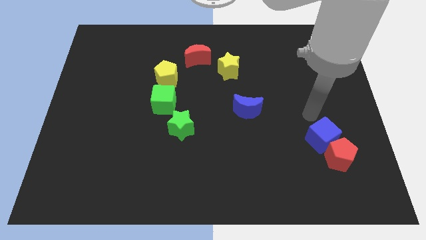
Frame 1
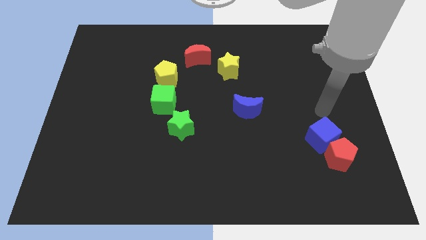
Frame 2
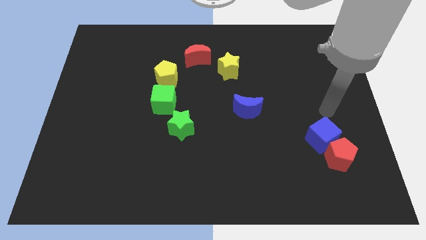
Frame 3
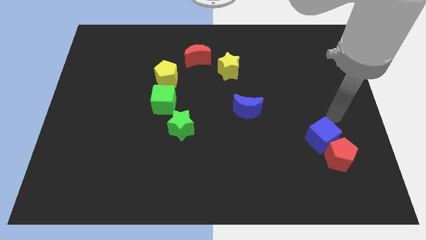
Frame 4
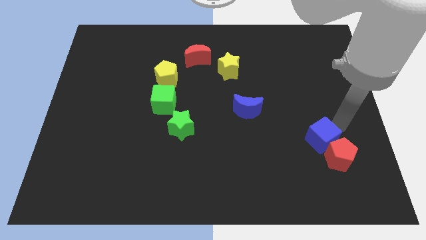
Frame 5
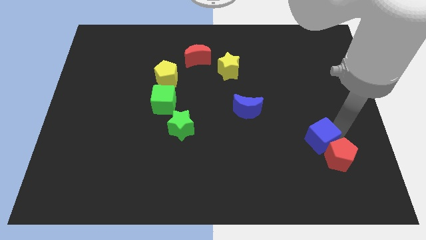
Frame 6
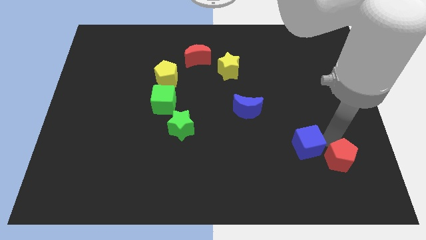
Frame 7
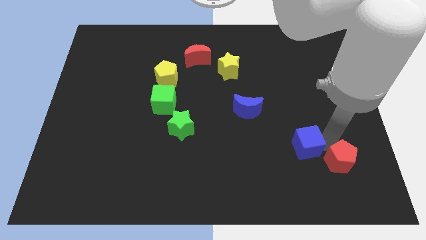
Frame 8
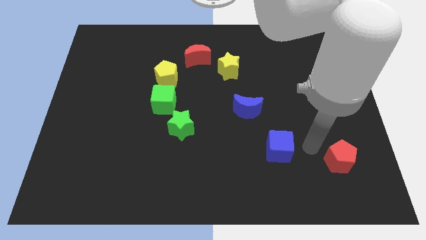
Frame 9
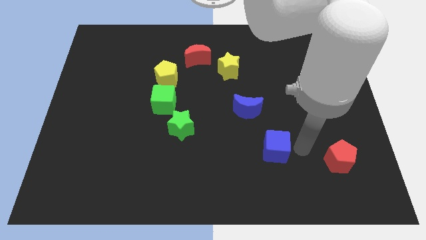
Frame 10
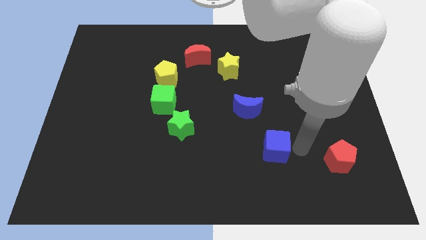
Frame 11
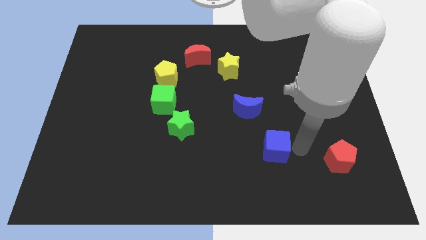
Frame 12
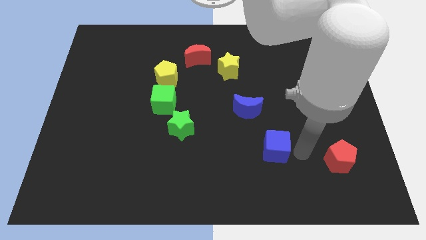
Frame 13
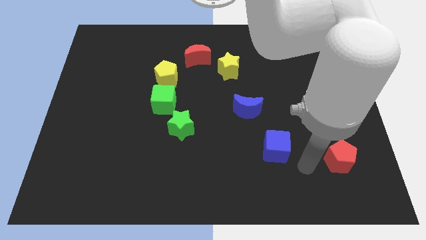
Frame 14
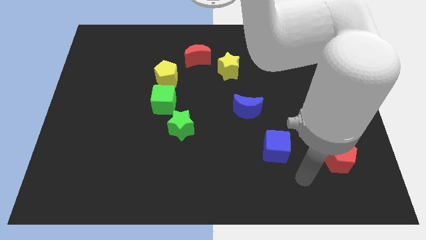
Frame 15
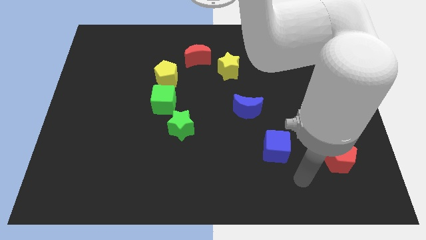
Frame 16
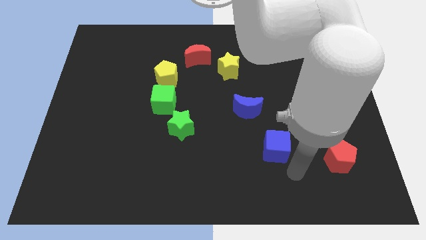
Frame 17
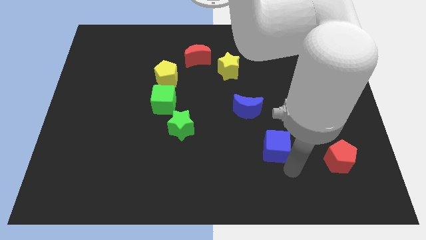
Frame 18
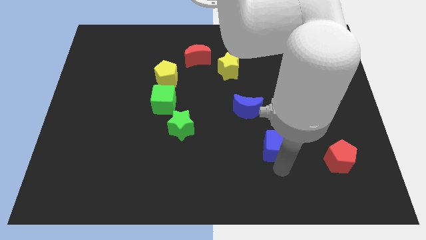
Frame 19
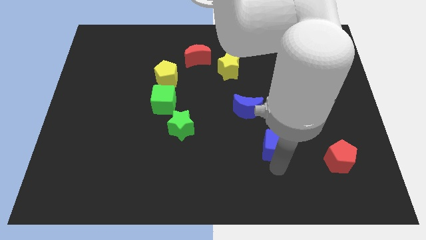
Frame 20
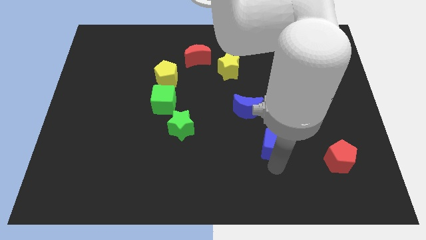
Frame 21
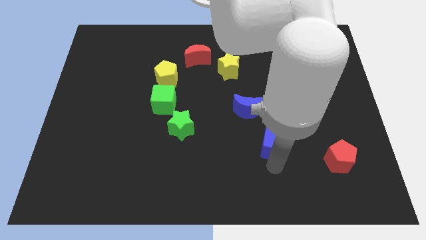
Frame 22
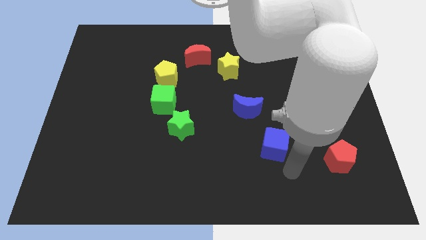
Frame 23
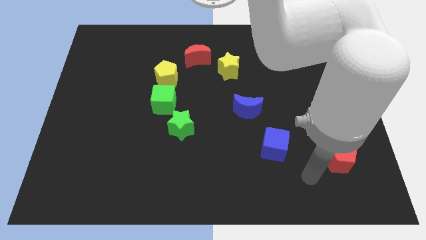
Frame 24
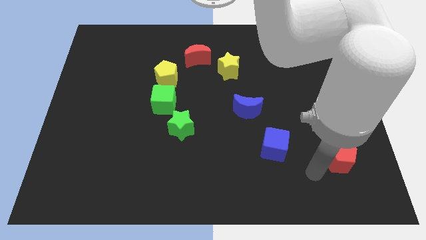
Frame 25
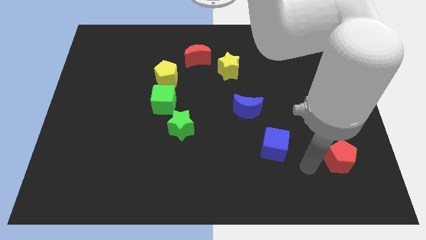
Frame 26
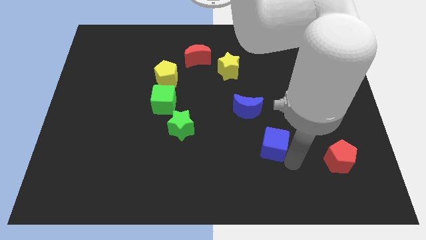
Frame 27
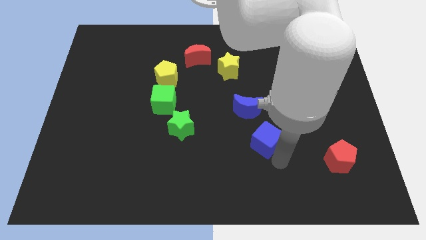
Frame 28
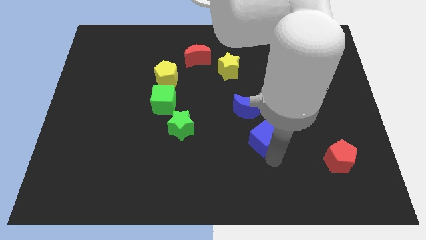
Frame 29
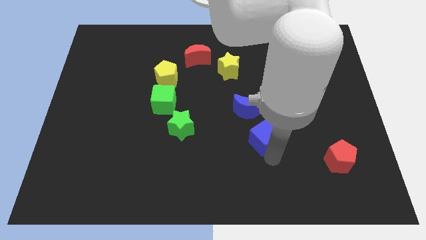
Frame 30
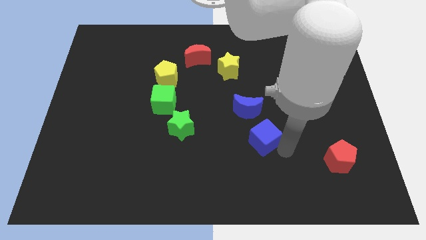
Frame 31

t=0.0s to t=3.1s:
slide the blue cube to the bottom right of the blue moon

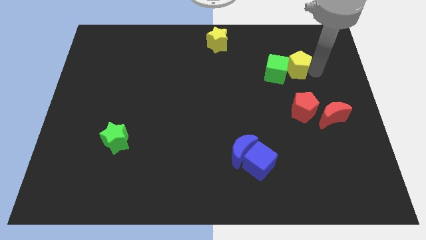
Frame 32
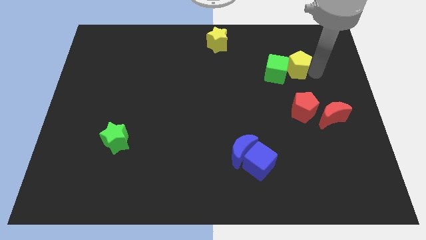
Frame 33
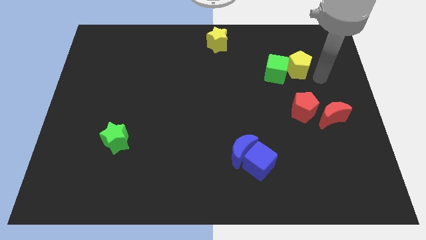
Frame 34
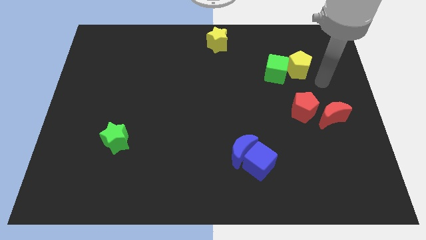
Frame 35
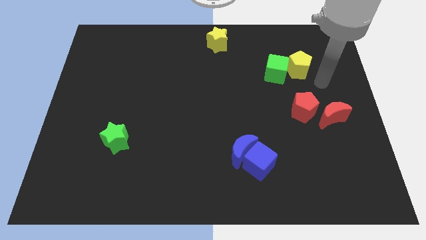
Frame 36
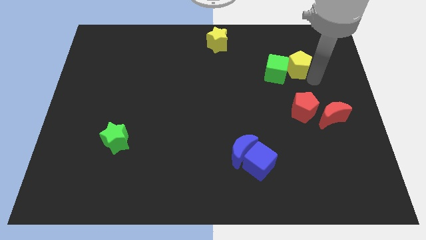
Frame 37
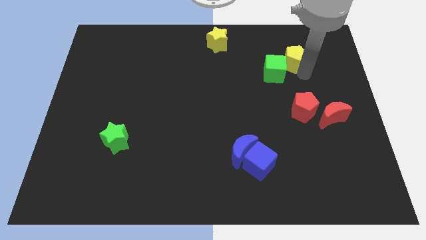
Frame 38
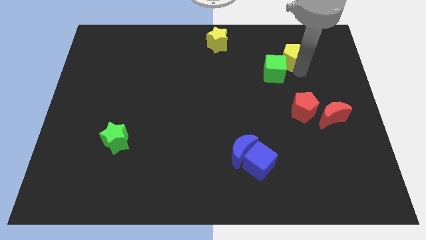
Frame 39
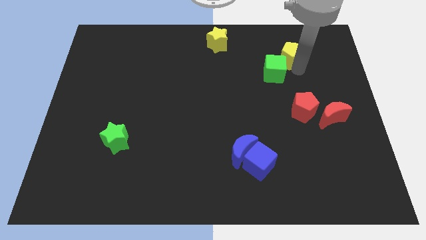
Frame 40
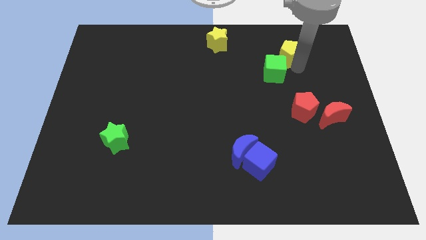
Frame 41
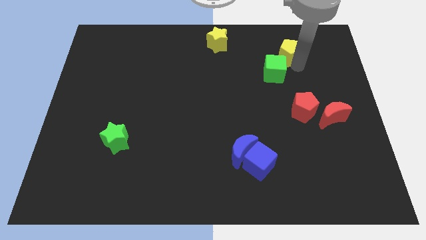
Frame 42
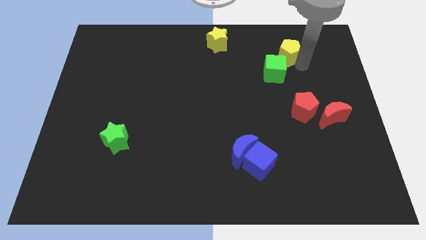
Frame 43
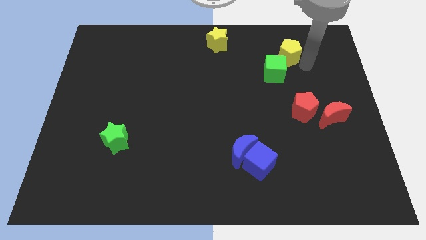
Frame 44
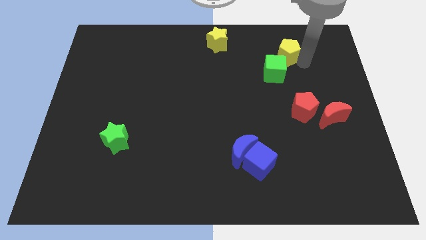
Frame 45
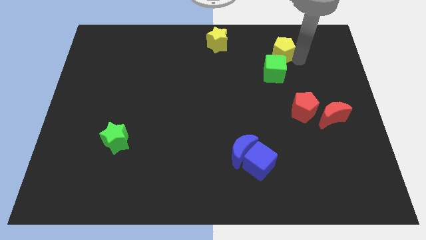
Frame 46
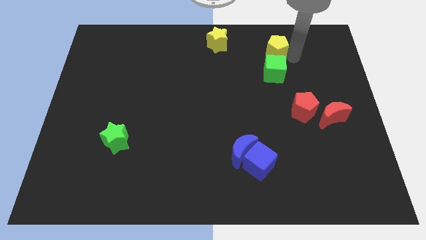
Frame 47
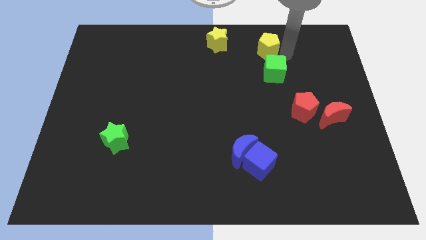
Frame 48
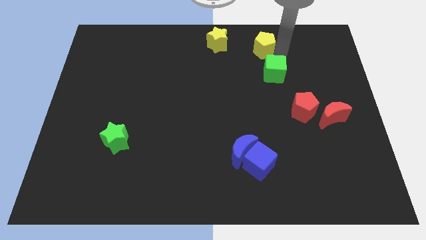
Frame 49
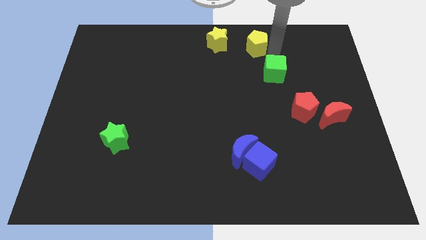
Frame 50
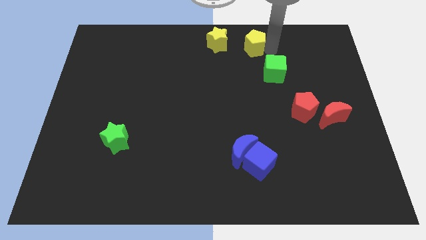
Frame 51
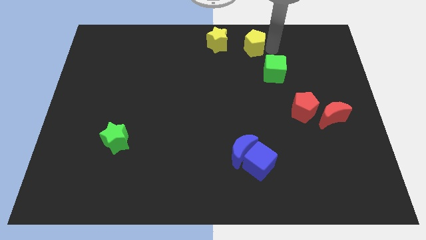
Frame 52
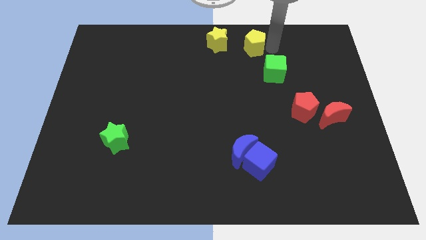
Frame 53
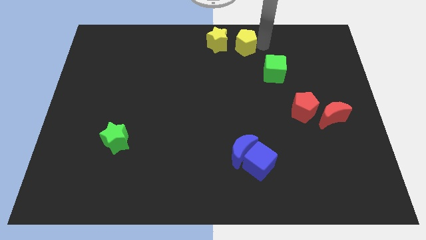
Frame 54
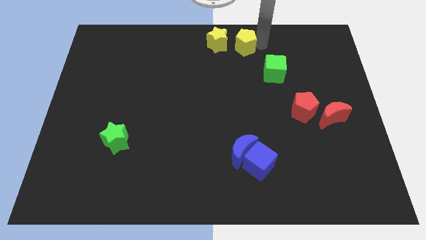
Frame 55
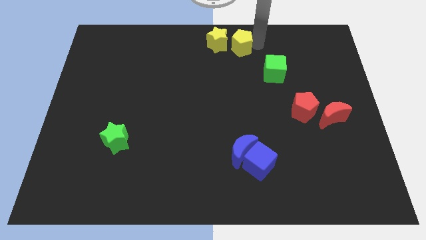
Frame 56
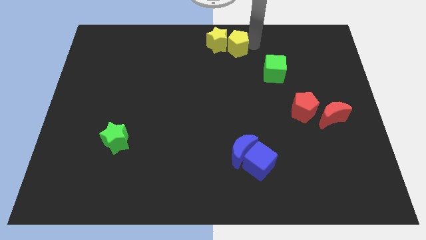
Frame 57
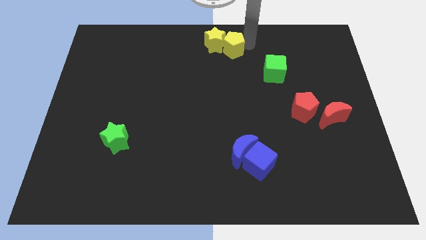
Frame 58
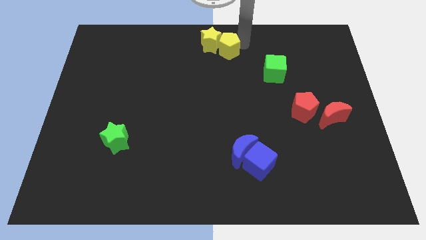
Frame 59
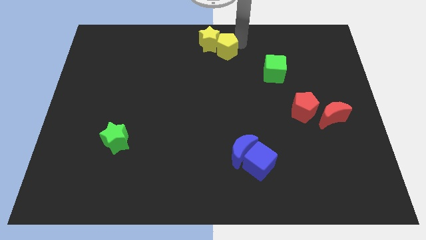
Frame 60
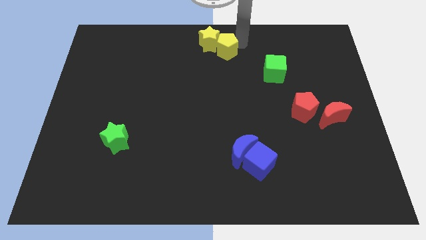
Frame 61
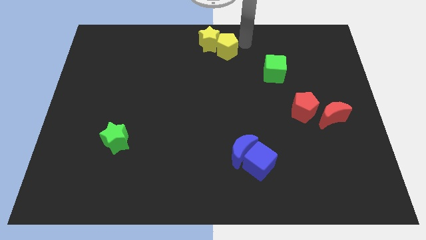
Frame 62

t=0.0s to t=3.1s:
push the yellow pentagon into yellow star

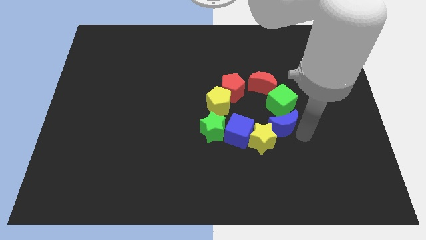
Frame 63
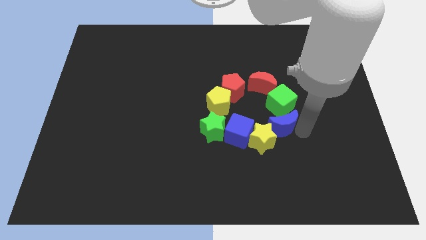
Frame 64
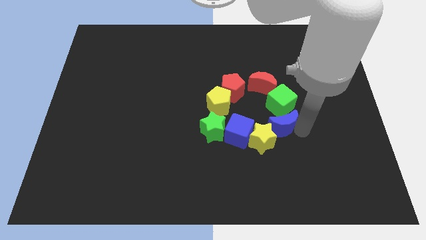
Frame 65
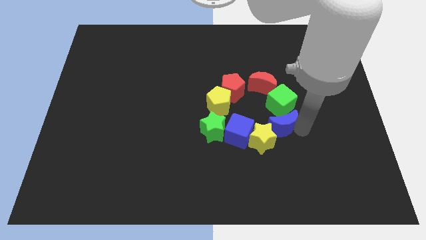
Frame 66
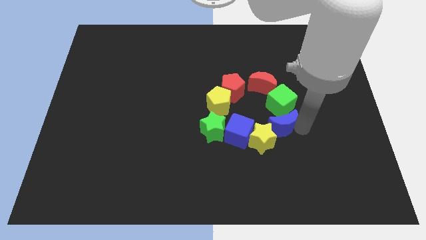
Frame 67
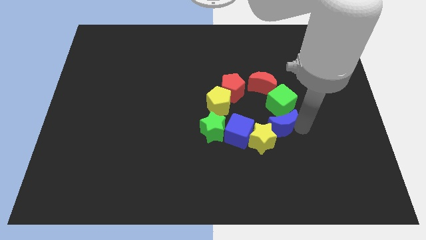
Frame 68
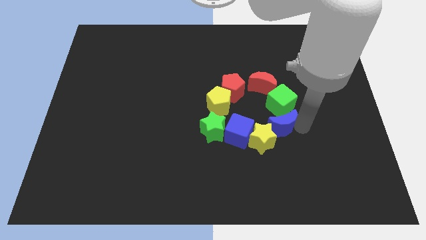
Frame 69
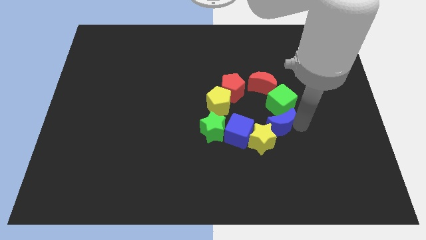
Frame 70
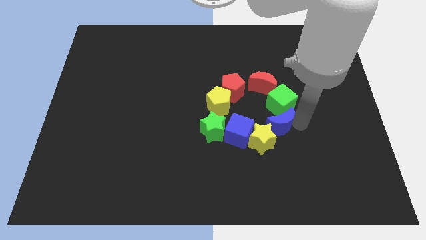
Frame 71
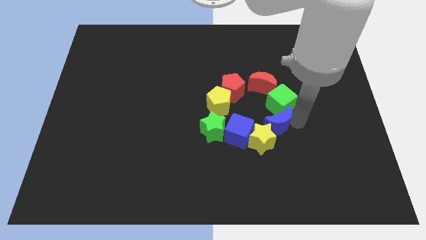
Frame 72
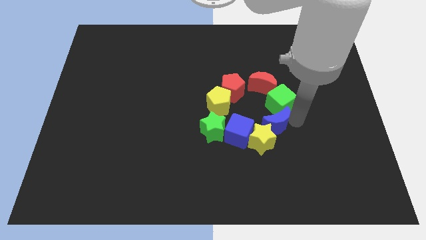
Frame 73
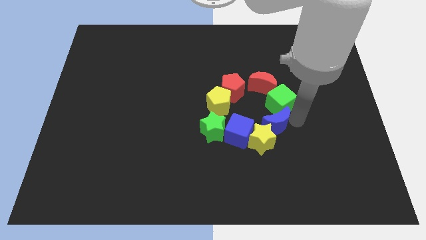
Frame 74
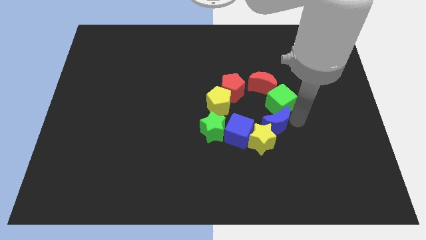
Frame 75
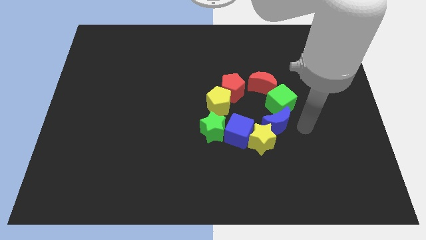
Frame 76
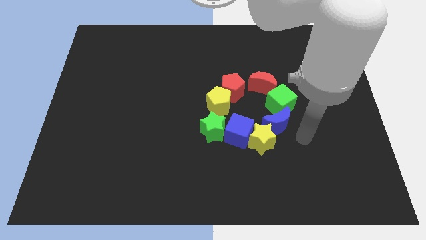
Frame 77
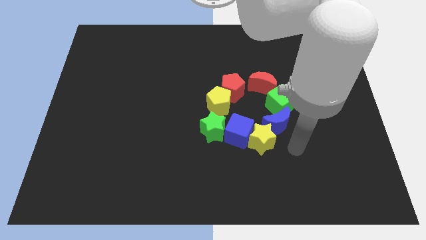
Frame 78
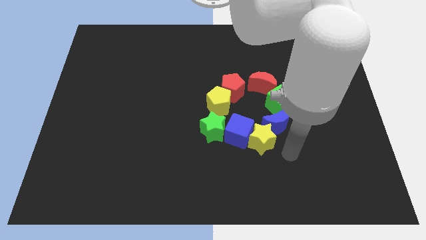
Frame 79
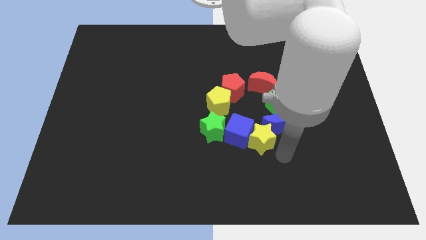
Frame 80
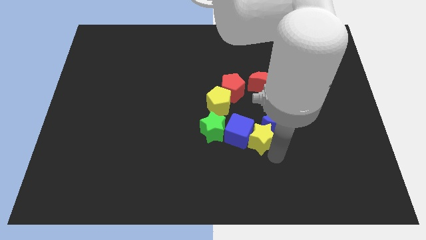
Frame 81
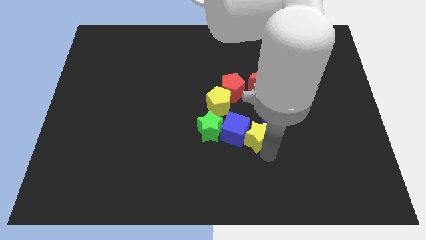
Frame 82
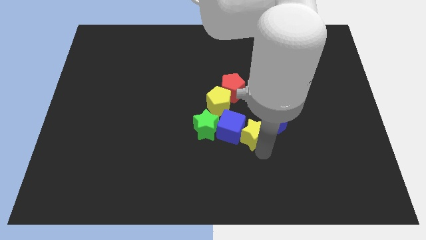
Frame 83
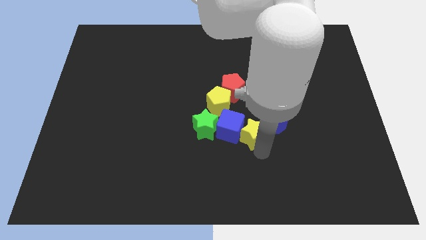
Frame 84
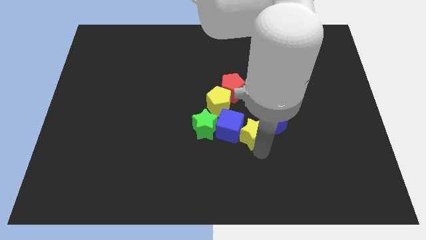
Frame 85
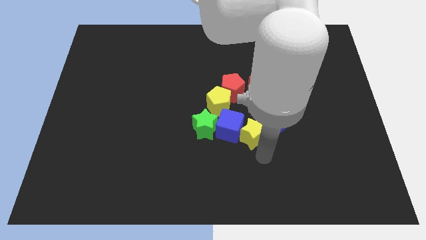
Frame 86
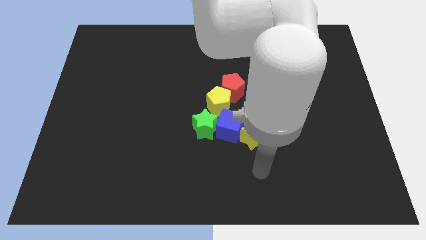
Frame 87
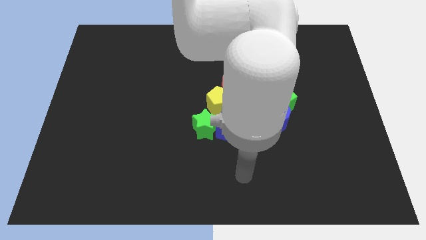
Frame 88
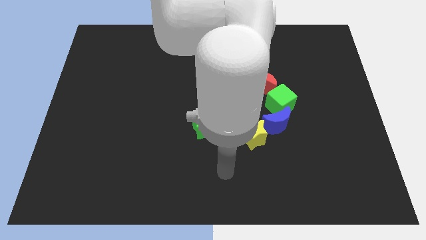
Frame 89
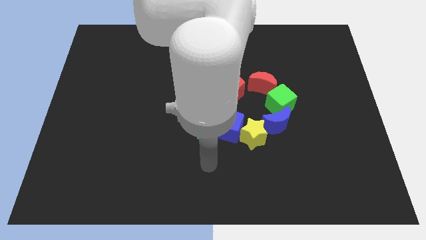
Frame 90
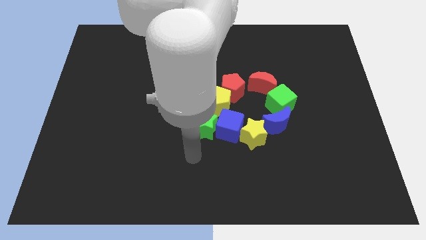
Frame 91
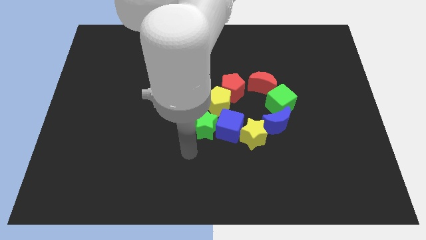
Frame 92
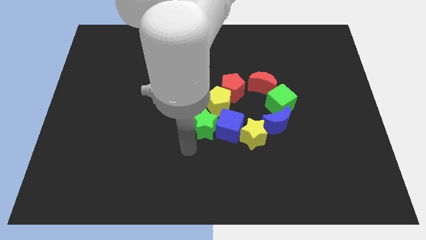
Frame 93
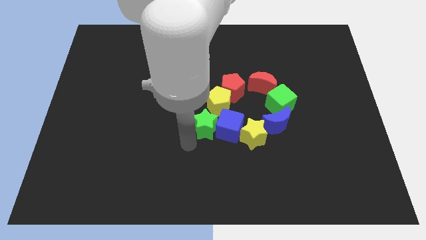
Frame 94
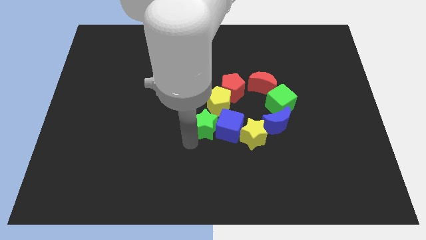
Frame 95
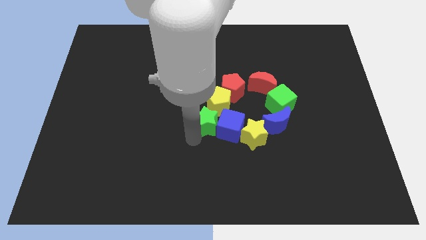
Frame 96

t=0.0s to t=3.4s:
move your arm from blue moon to green star
